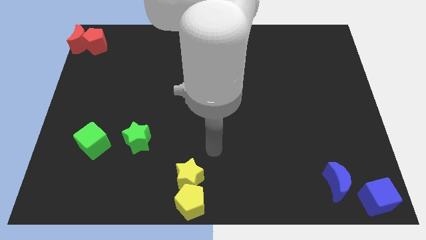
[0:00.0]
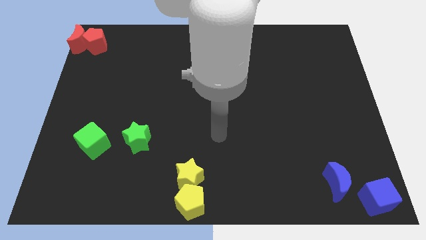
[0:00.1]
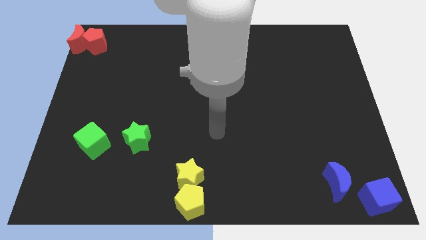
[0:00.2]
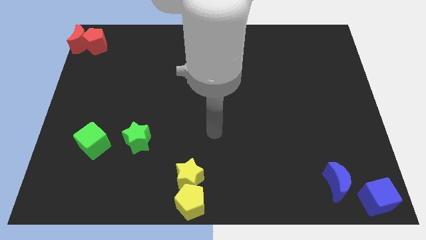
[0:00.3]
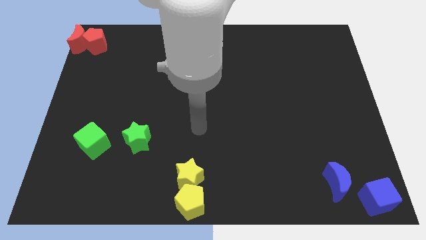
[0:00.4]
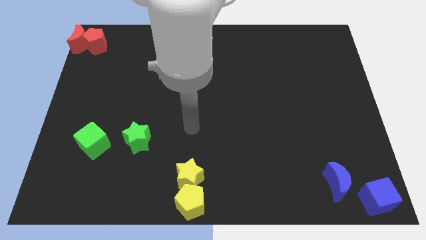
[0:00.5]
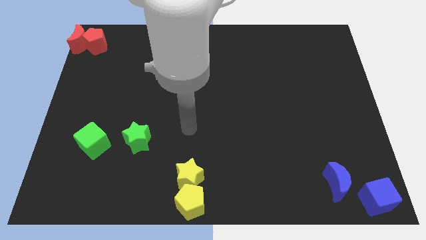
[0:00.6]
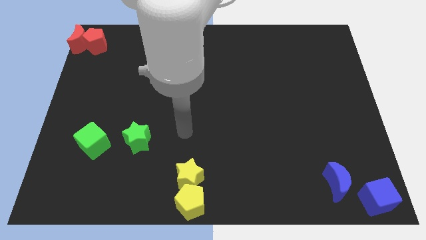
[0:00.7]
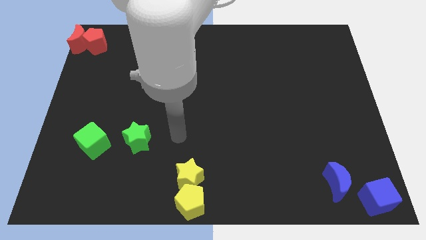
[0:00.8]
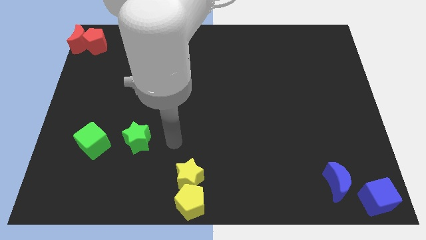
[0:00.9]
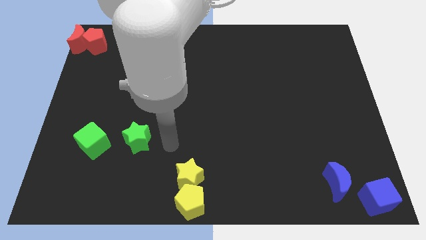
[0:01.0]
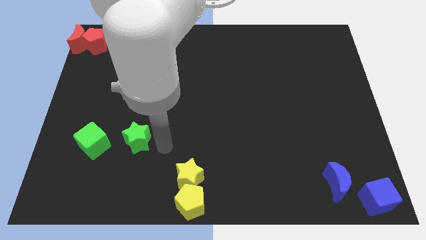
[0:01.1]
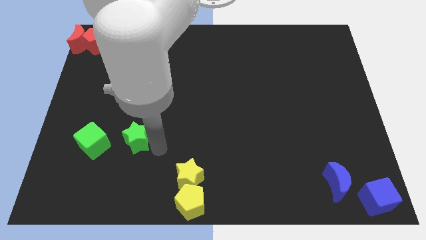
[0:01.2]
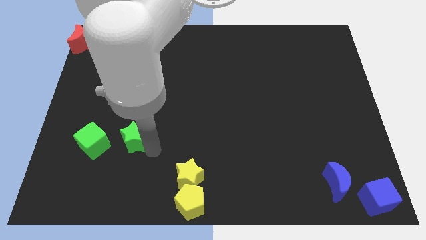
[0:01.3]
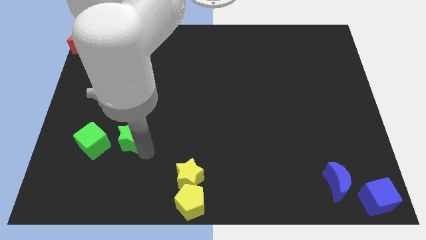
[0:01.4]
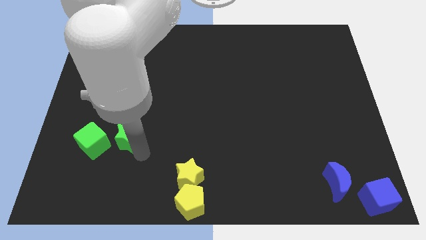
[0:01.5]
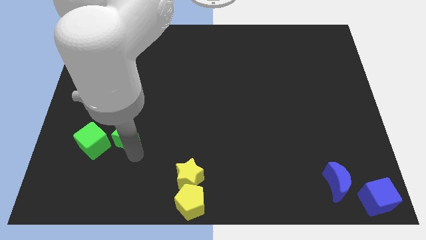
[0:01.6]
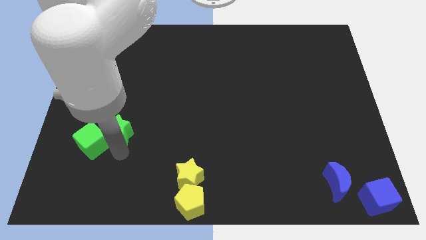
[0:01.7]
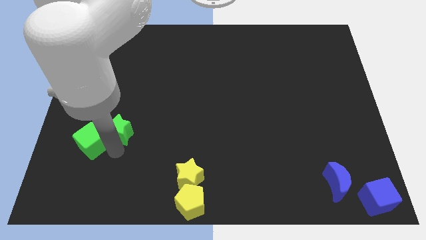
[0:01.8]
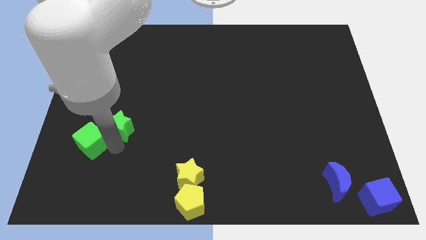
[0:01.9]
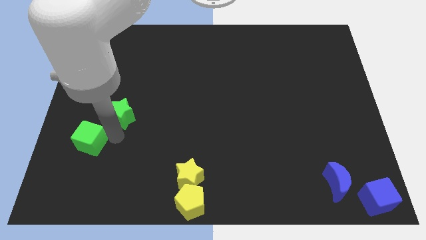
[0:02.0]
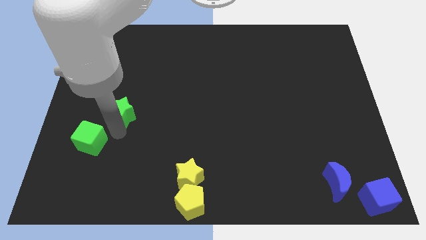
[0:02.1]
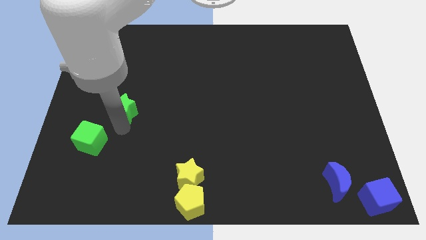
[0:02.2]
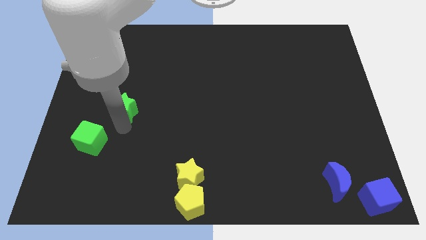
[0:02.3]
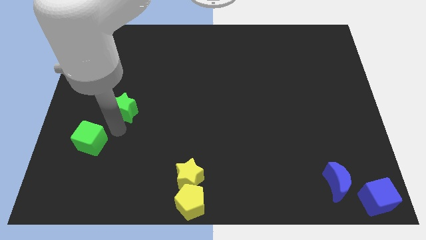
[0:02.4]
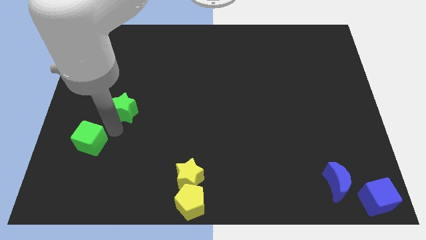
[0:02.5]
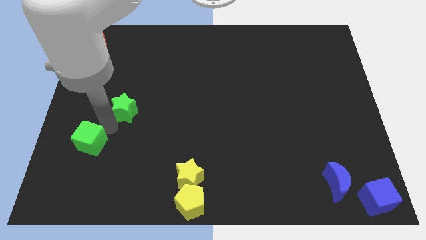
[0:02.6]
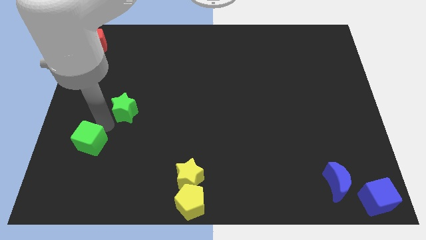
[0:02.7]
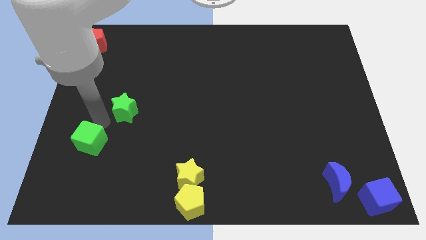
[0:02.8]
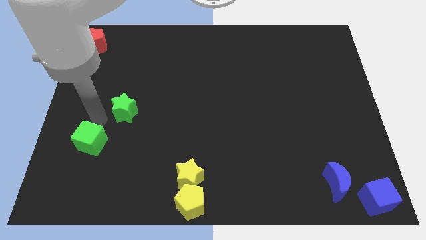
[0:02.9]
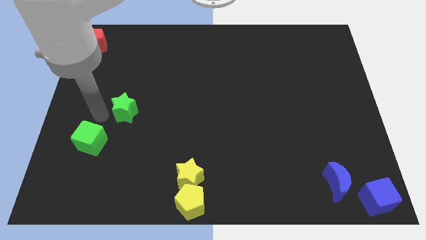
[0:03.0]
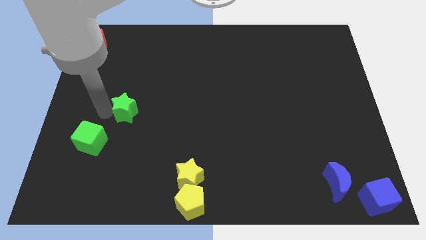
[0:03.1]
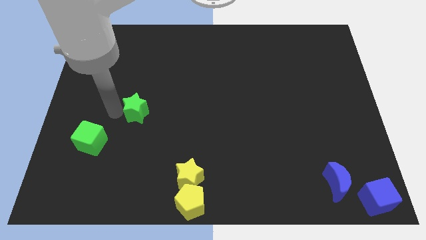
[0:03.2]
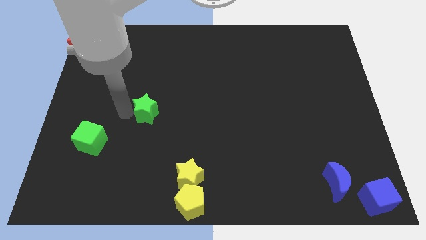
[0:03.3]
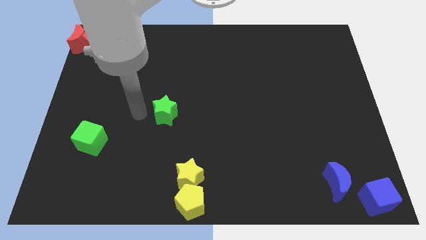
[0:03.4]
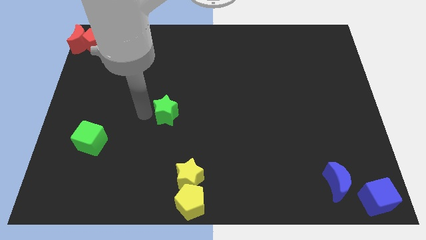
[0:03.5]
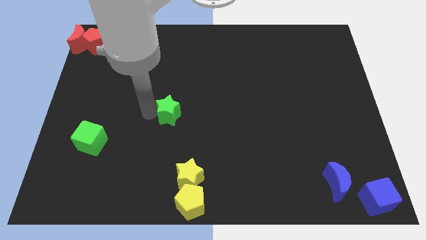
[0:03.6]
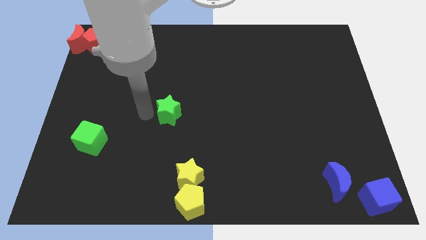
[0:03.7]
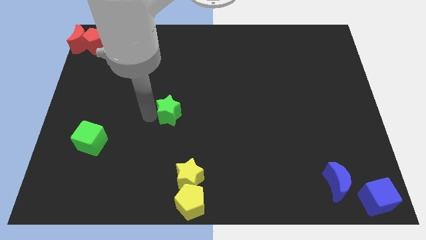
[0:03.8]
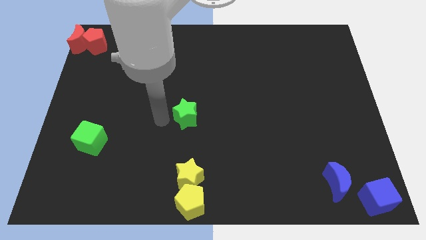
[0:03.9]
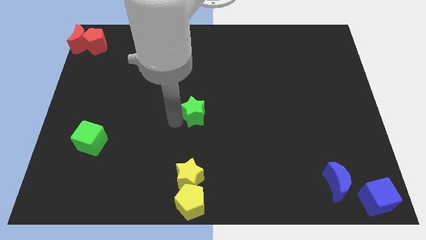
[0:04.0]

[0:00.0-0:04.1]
place the green star vertically above the yellow star

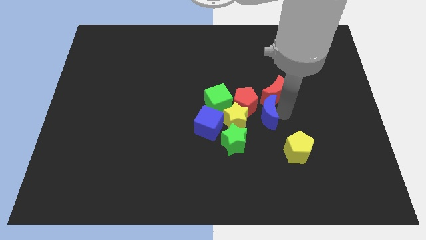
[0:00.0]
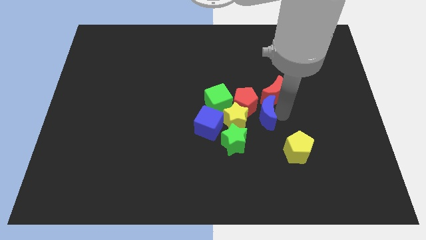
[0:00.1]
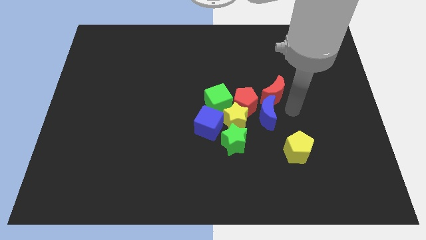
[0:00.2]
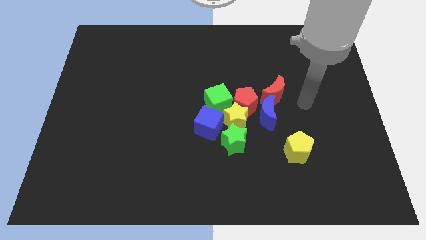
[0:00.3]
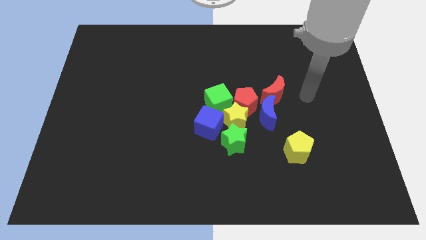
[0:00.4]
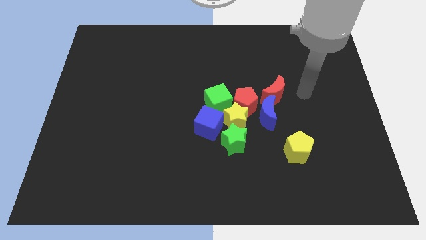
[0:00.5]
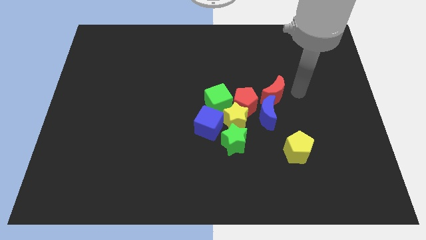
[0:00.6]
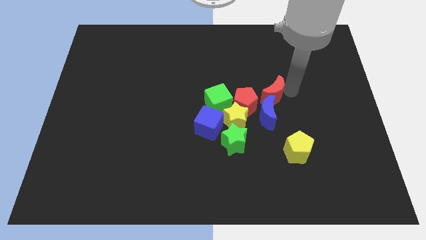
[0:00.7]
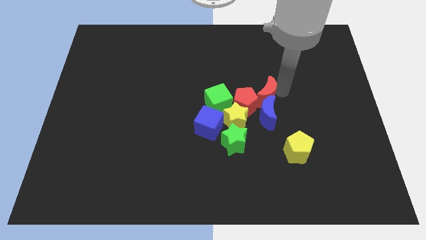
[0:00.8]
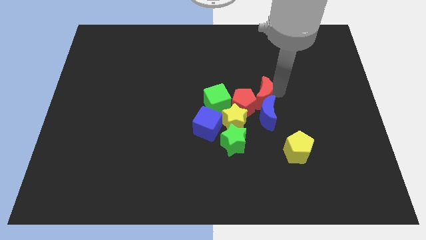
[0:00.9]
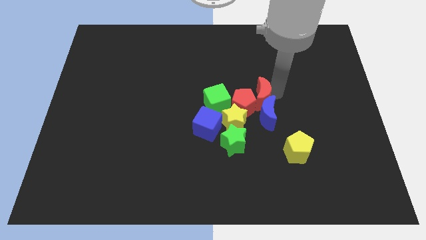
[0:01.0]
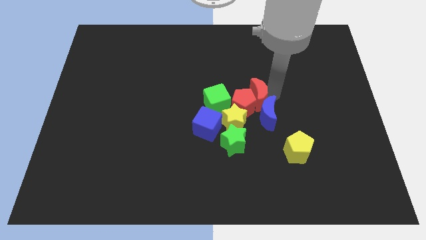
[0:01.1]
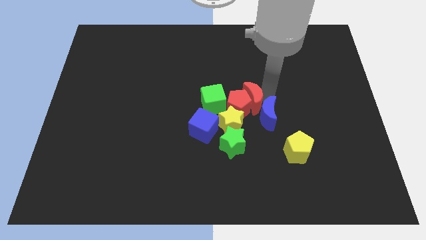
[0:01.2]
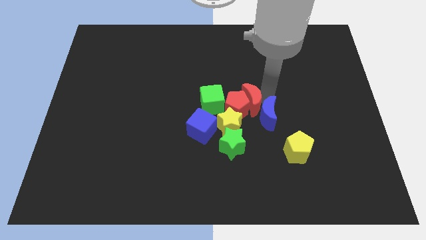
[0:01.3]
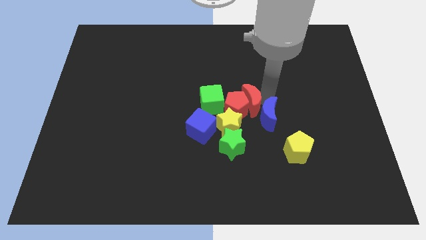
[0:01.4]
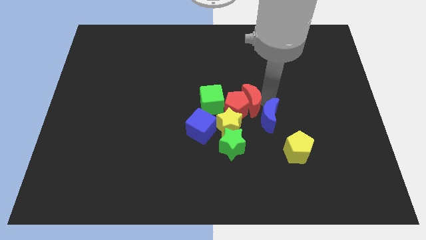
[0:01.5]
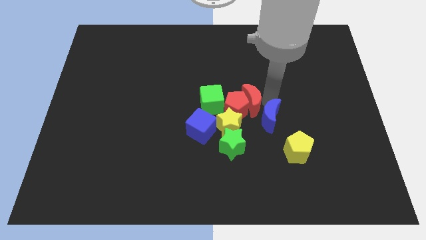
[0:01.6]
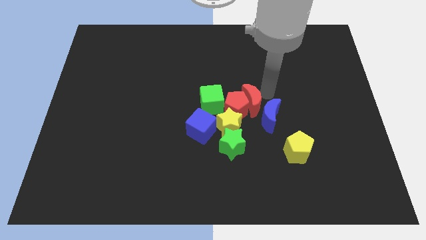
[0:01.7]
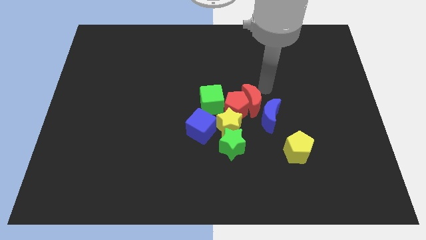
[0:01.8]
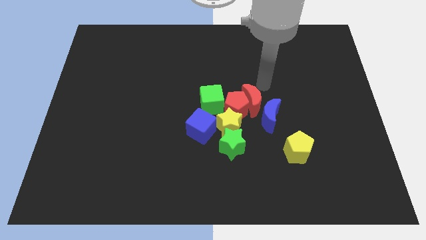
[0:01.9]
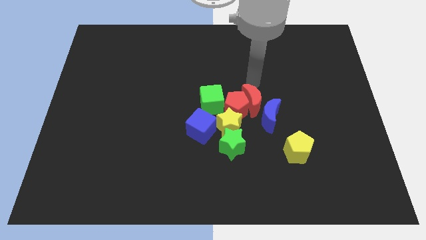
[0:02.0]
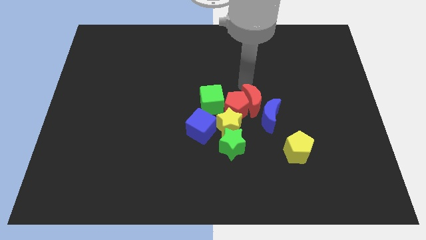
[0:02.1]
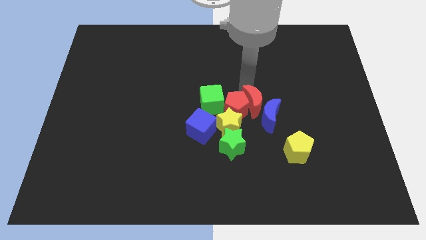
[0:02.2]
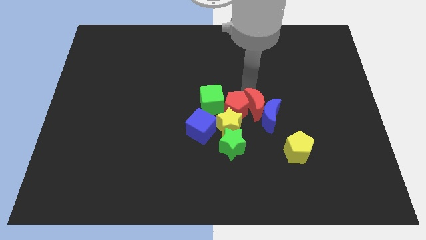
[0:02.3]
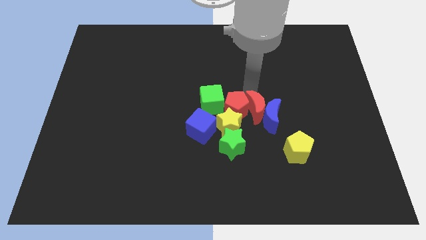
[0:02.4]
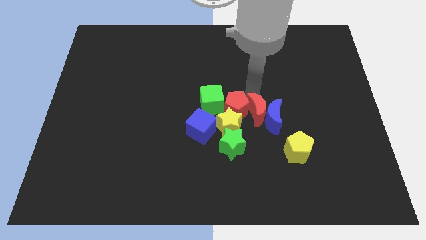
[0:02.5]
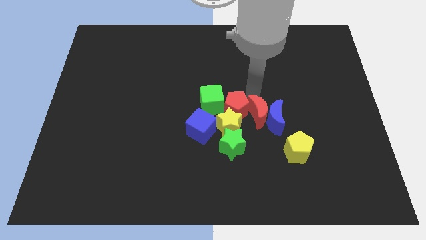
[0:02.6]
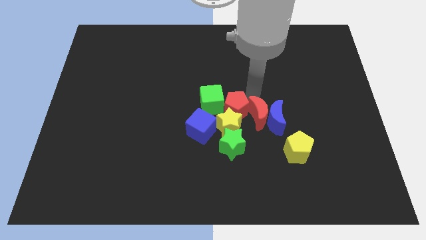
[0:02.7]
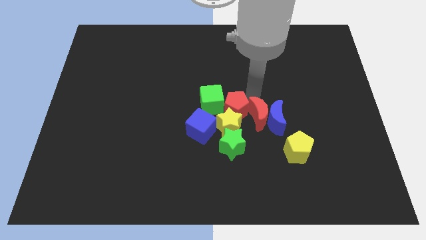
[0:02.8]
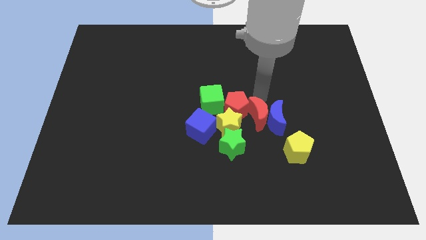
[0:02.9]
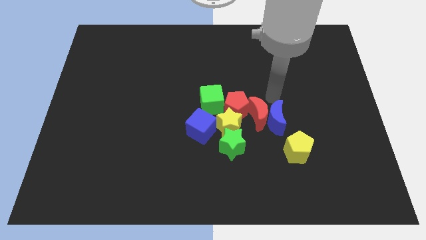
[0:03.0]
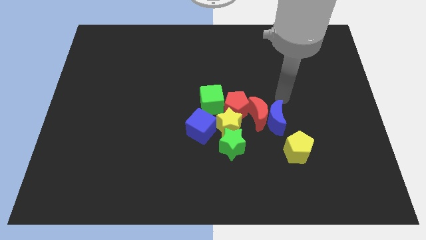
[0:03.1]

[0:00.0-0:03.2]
slide red moon parallel left to the blue moon

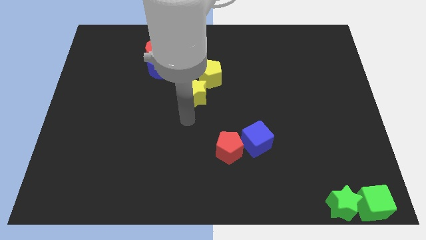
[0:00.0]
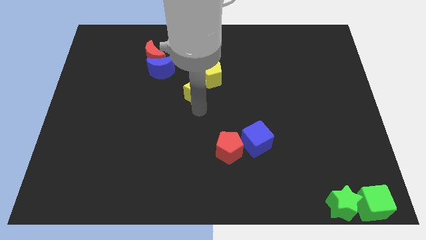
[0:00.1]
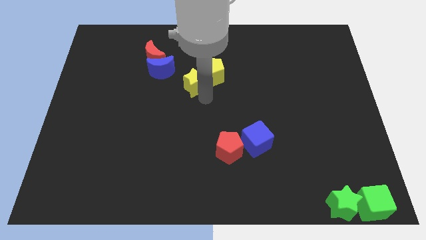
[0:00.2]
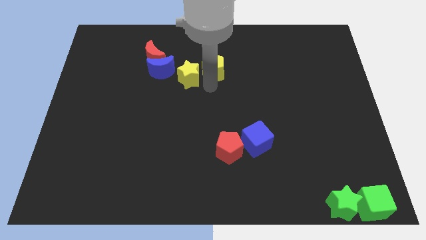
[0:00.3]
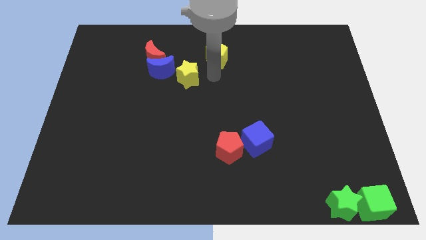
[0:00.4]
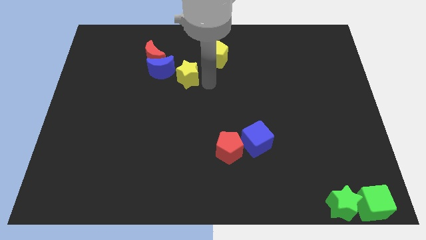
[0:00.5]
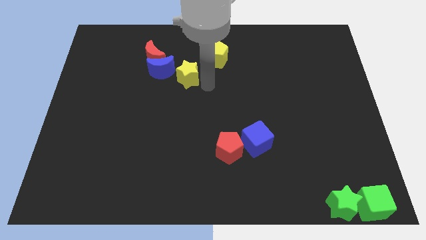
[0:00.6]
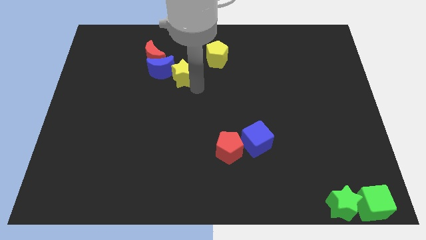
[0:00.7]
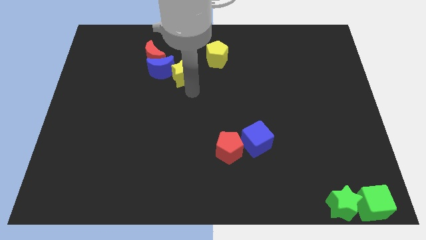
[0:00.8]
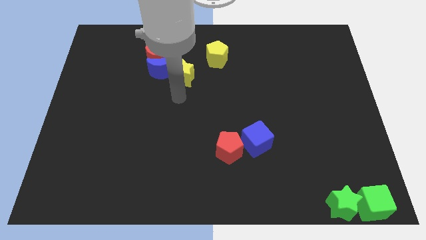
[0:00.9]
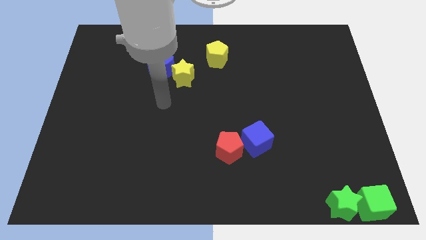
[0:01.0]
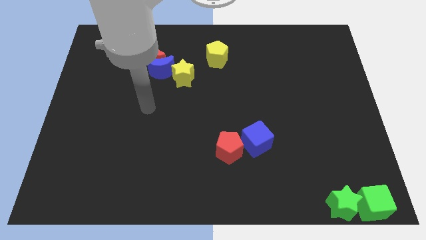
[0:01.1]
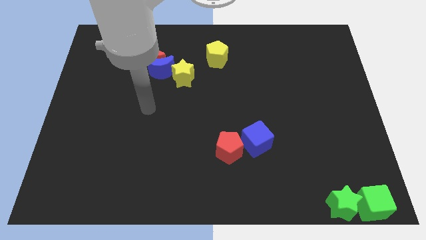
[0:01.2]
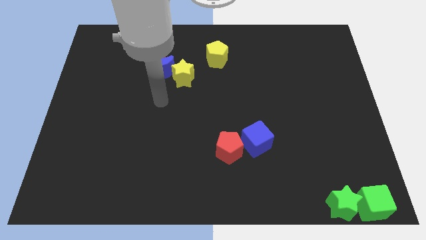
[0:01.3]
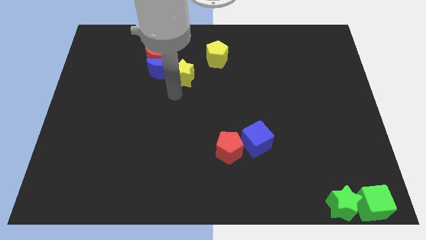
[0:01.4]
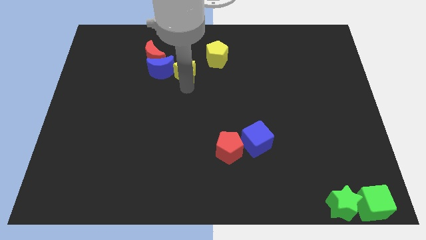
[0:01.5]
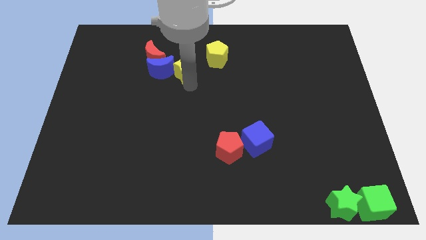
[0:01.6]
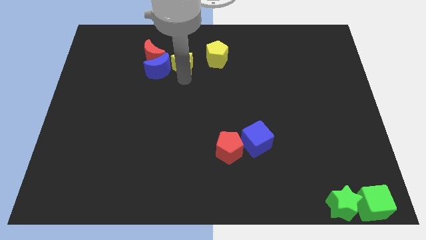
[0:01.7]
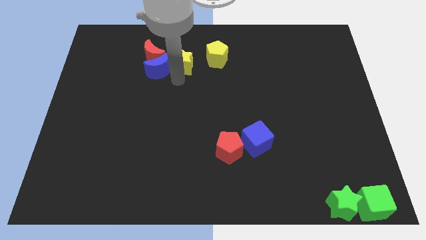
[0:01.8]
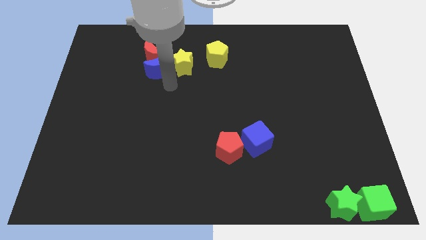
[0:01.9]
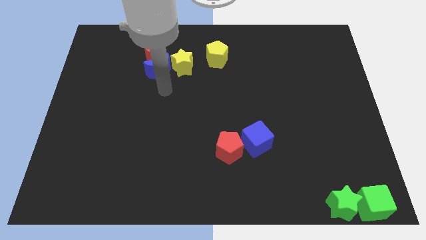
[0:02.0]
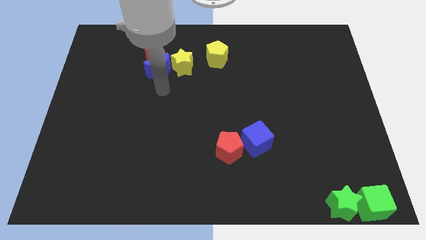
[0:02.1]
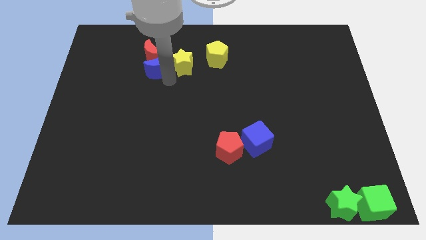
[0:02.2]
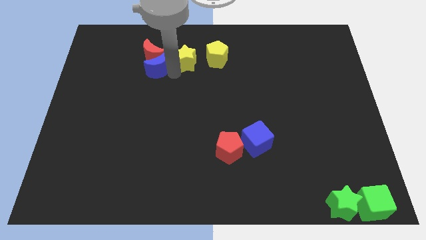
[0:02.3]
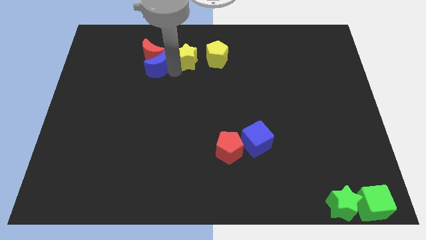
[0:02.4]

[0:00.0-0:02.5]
push the yellow color blocks to the right side of the group of crescents
